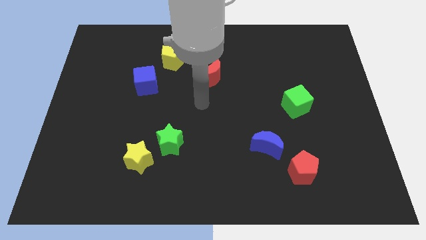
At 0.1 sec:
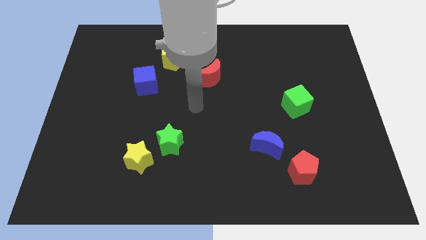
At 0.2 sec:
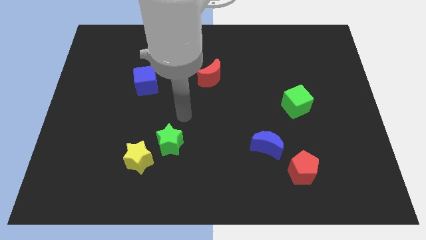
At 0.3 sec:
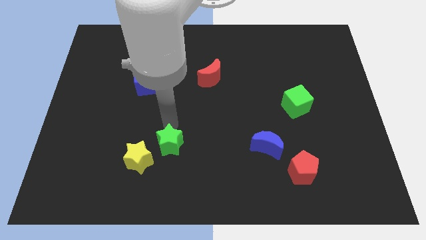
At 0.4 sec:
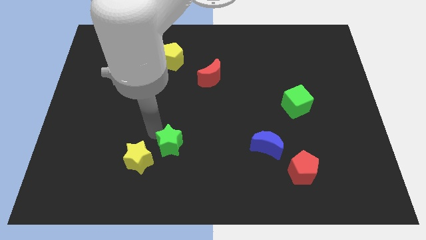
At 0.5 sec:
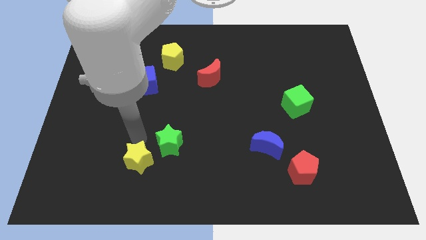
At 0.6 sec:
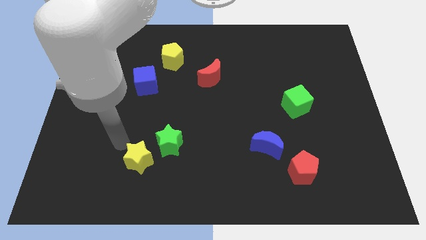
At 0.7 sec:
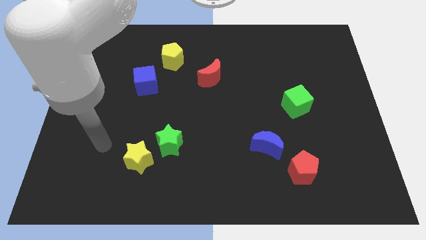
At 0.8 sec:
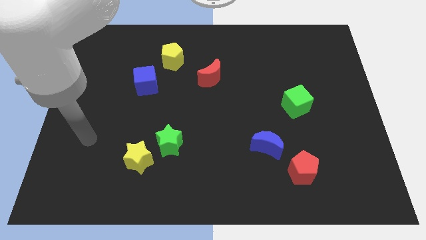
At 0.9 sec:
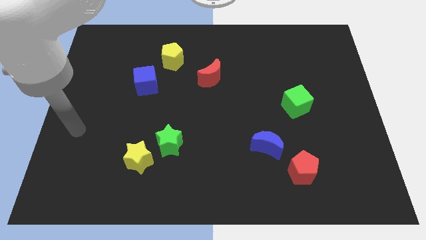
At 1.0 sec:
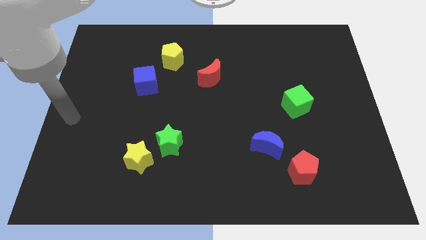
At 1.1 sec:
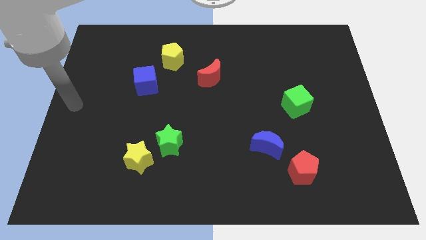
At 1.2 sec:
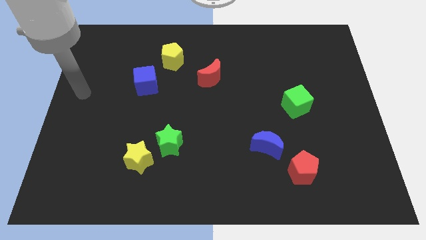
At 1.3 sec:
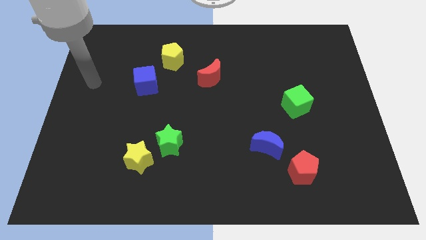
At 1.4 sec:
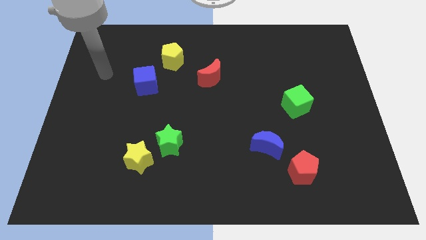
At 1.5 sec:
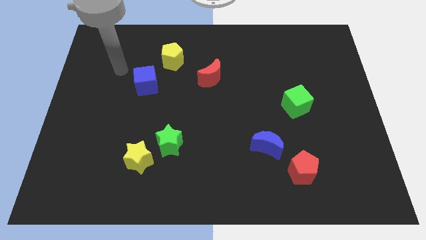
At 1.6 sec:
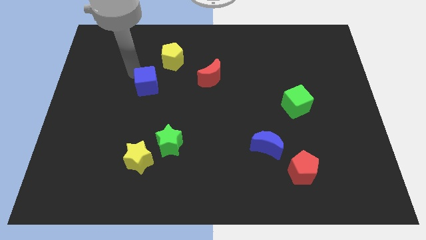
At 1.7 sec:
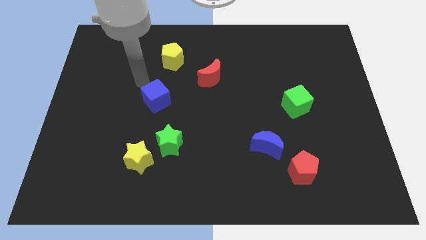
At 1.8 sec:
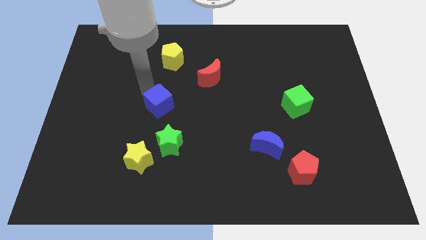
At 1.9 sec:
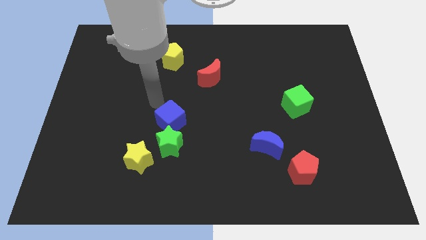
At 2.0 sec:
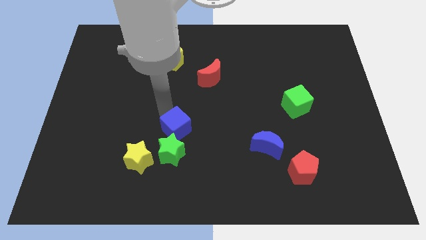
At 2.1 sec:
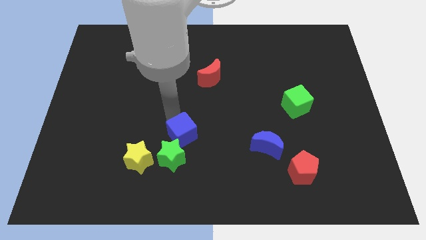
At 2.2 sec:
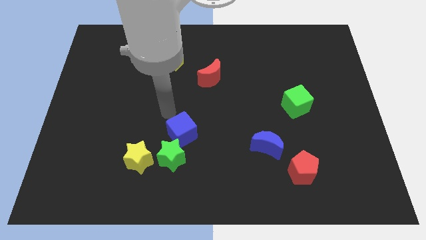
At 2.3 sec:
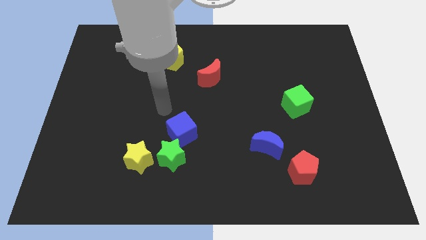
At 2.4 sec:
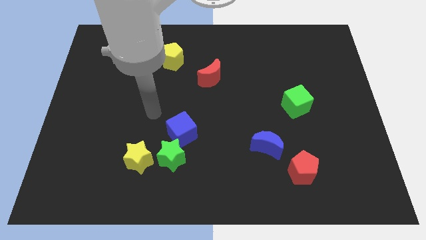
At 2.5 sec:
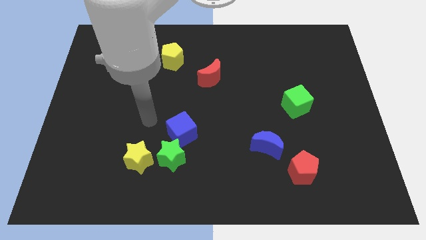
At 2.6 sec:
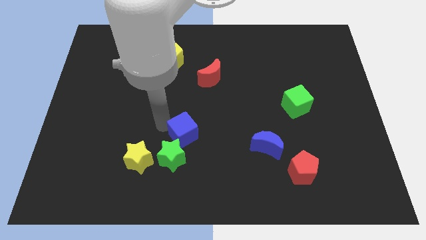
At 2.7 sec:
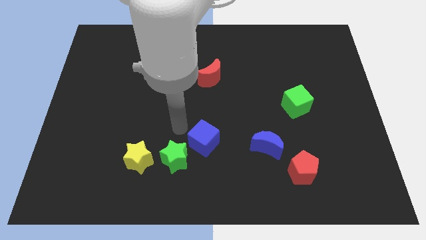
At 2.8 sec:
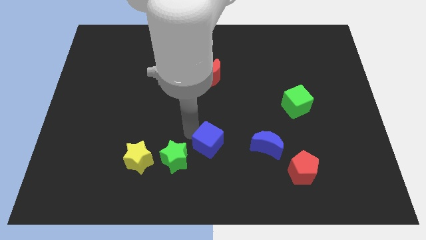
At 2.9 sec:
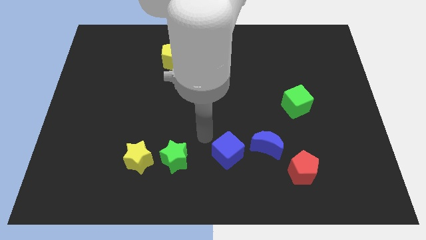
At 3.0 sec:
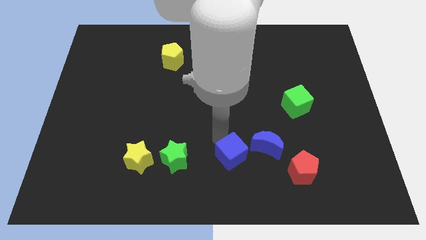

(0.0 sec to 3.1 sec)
place the blue cube parallel right to the green star

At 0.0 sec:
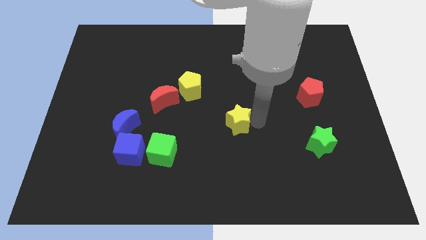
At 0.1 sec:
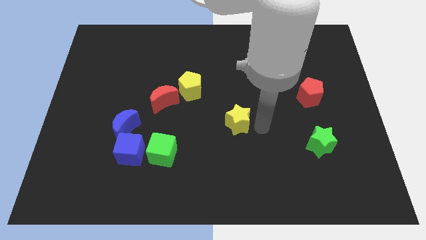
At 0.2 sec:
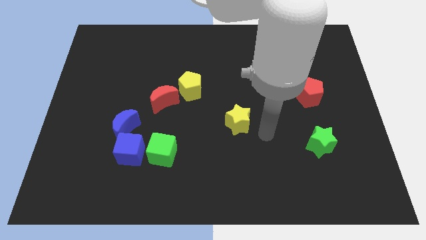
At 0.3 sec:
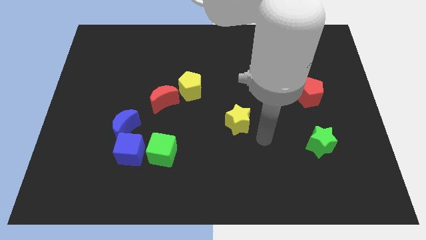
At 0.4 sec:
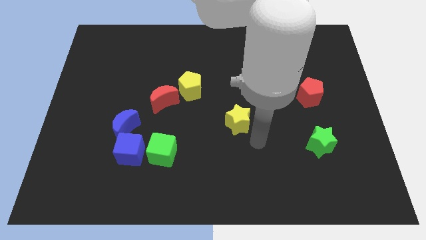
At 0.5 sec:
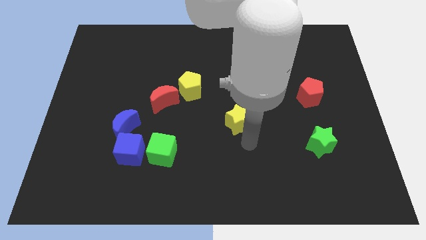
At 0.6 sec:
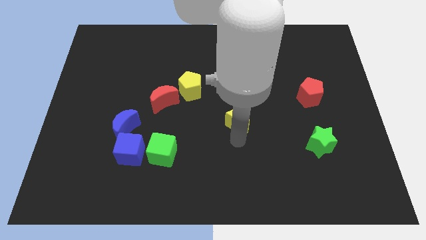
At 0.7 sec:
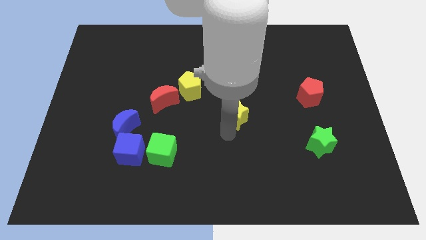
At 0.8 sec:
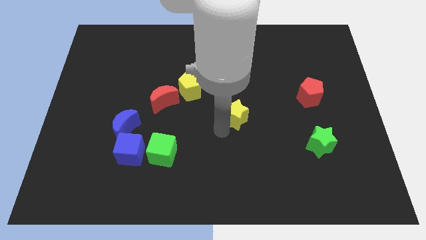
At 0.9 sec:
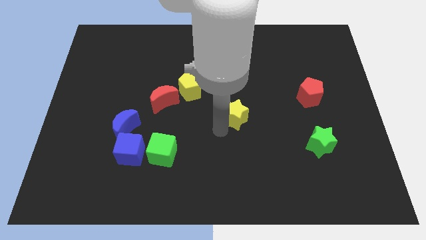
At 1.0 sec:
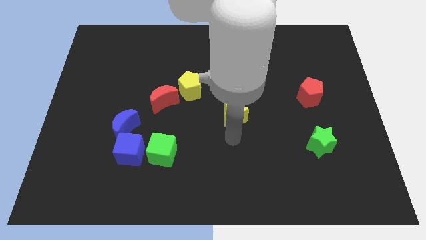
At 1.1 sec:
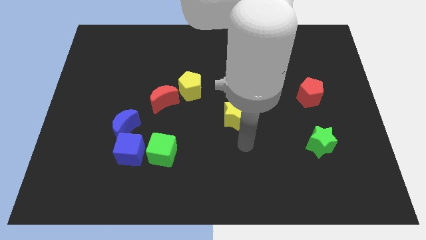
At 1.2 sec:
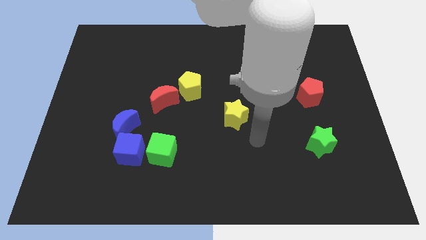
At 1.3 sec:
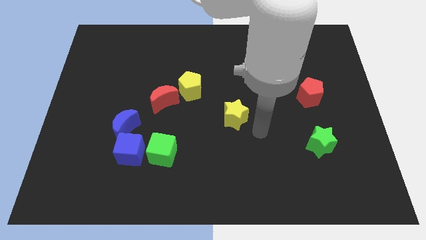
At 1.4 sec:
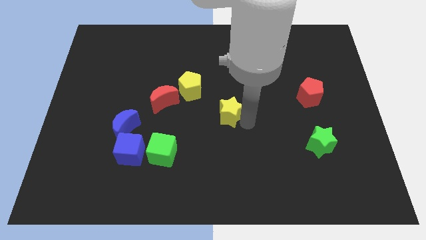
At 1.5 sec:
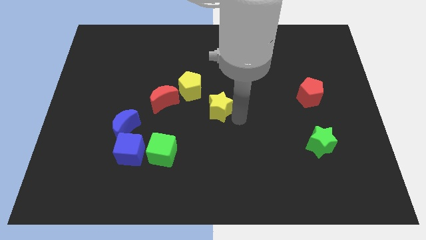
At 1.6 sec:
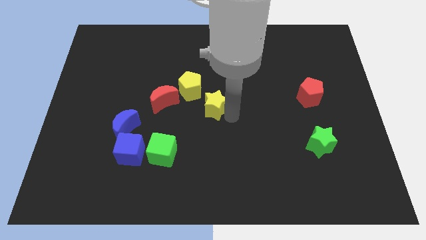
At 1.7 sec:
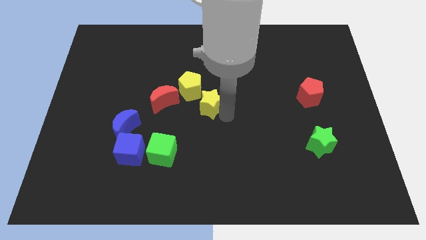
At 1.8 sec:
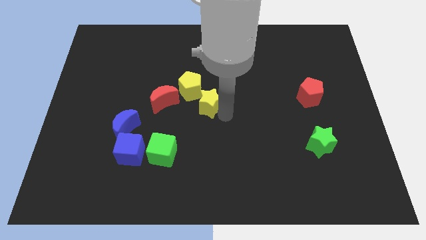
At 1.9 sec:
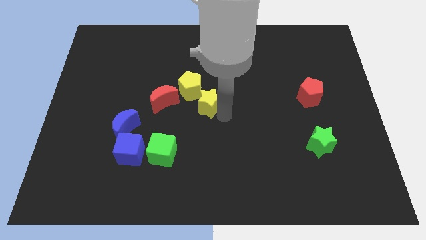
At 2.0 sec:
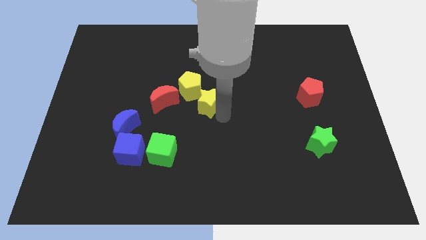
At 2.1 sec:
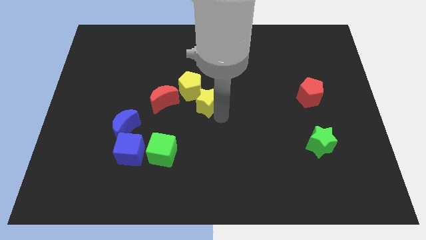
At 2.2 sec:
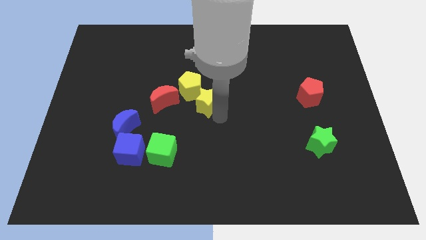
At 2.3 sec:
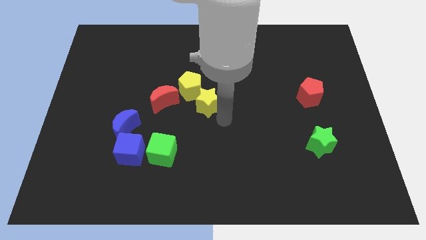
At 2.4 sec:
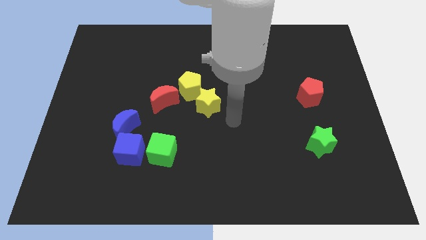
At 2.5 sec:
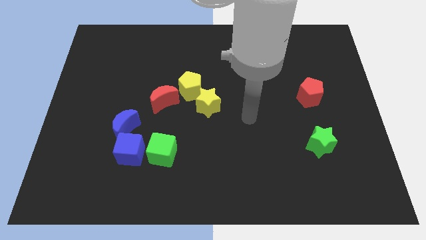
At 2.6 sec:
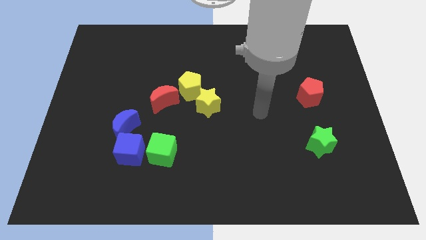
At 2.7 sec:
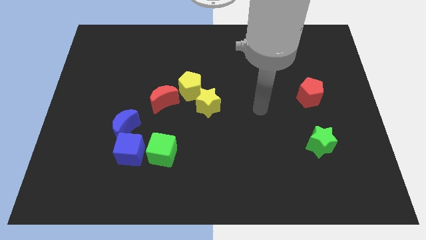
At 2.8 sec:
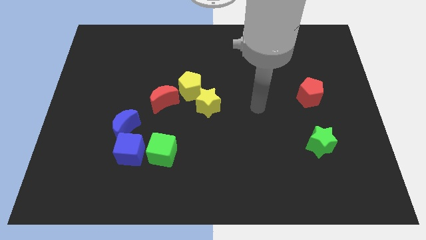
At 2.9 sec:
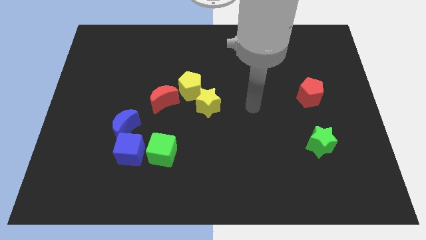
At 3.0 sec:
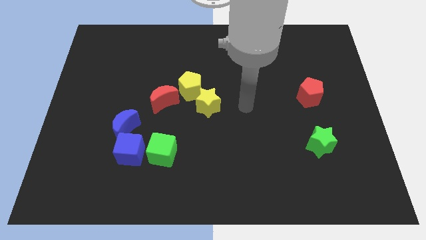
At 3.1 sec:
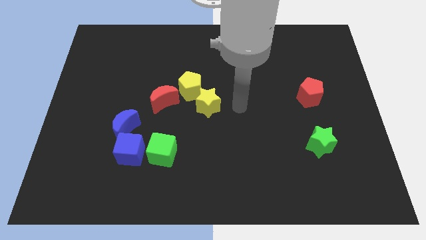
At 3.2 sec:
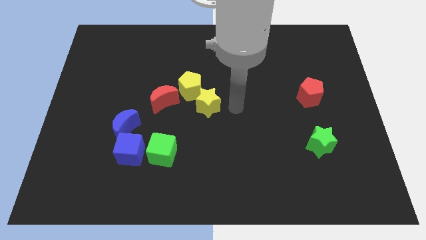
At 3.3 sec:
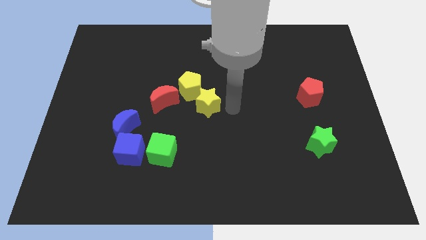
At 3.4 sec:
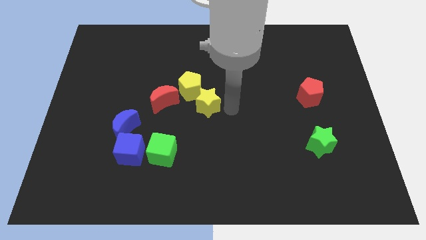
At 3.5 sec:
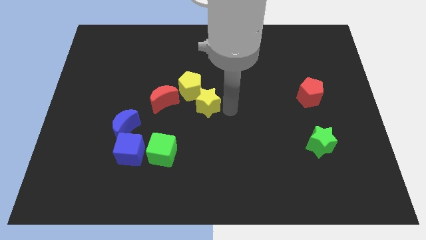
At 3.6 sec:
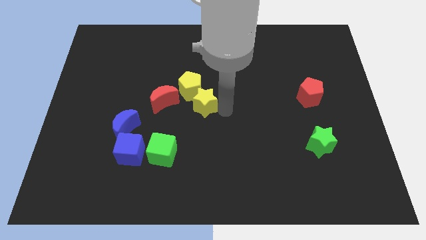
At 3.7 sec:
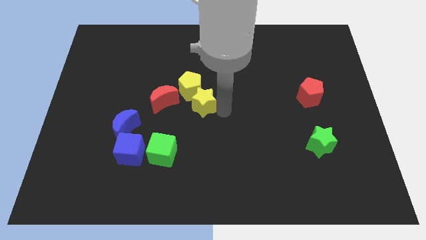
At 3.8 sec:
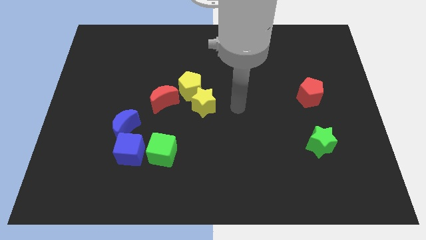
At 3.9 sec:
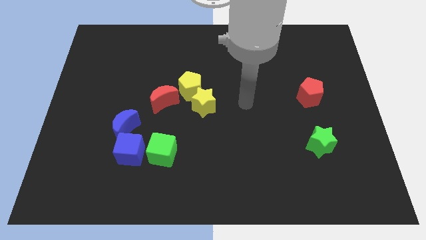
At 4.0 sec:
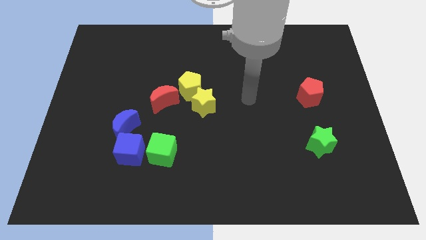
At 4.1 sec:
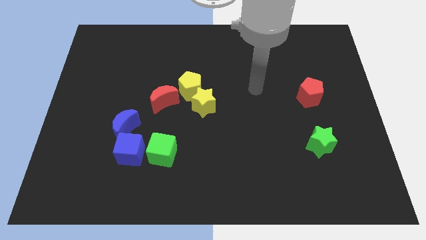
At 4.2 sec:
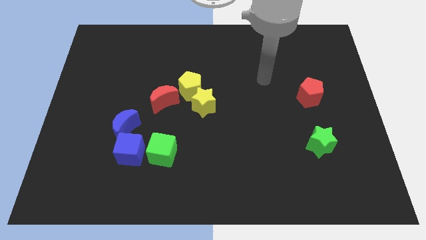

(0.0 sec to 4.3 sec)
push the yellow star into the yellow pentagon

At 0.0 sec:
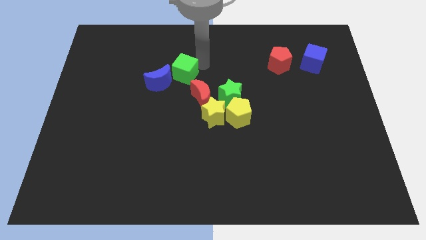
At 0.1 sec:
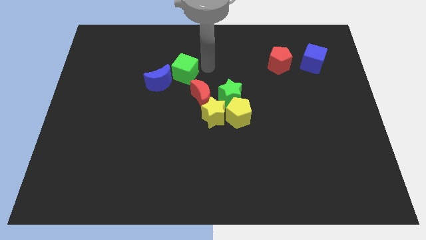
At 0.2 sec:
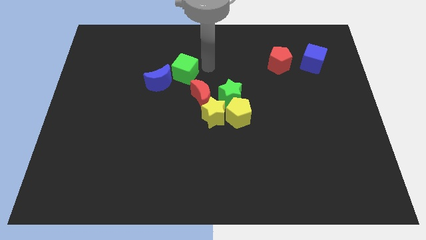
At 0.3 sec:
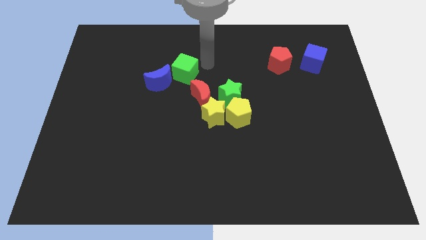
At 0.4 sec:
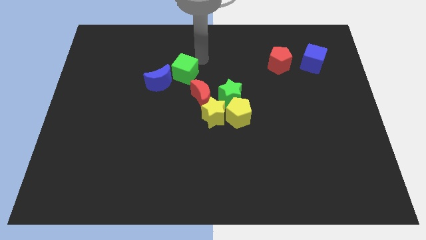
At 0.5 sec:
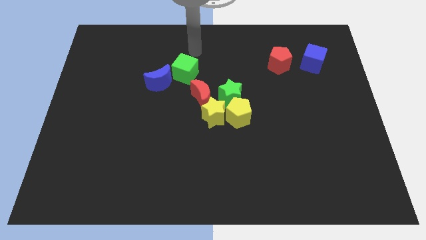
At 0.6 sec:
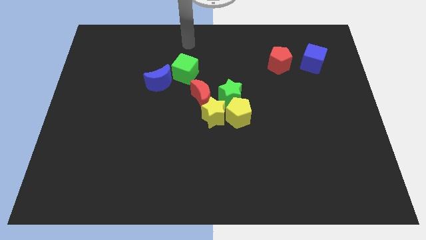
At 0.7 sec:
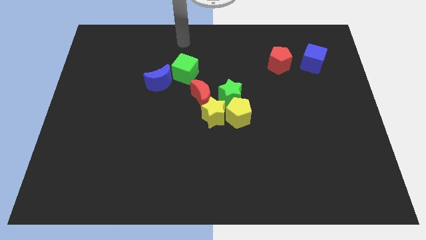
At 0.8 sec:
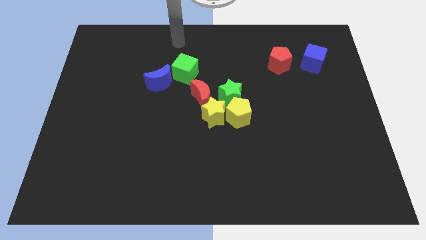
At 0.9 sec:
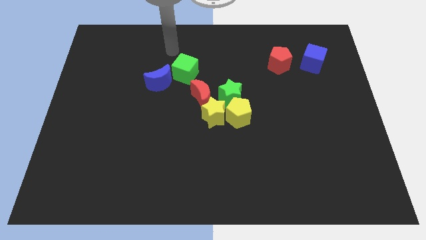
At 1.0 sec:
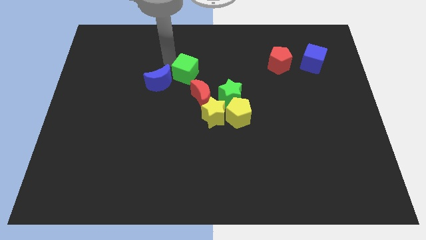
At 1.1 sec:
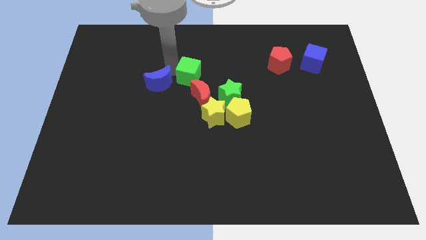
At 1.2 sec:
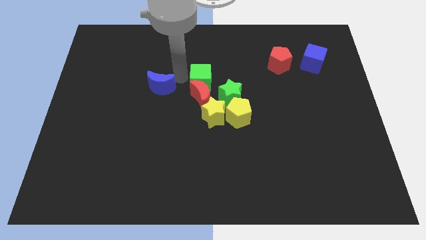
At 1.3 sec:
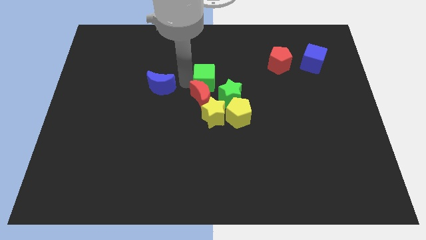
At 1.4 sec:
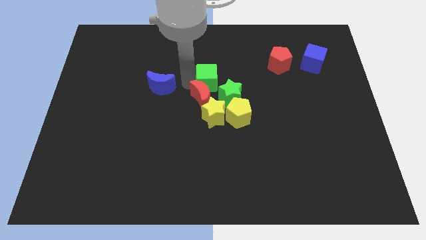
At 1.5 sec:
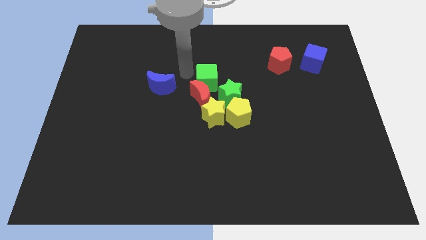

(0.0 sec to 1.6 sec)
separate the green cube and blue crescent from each other
